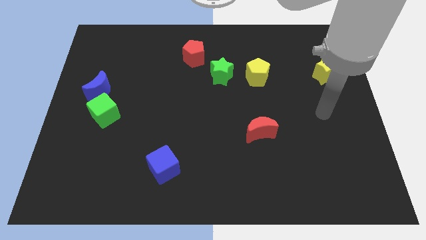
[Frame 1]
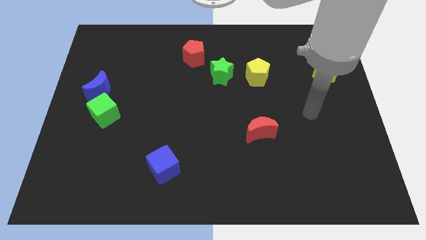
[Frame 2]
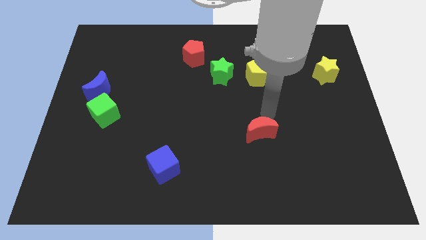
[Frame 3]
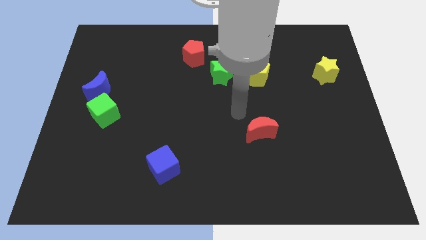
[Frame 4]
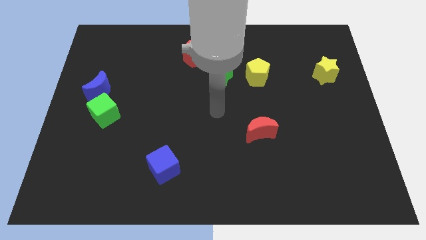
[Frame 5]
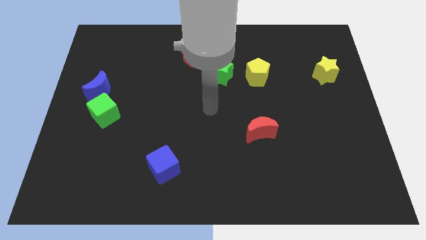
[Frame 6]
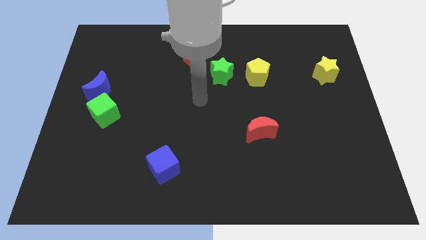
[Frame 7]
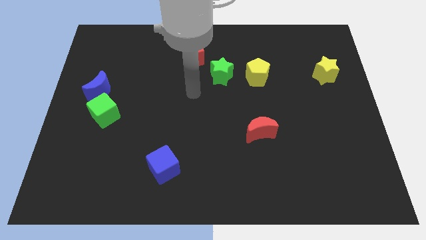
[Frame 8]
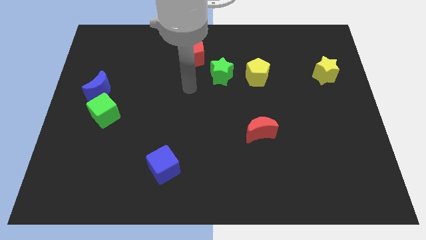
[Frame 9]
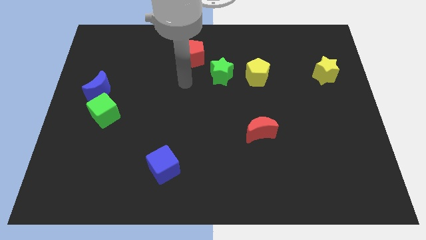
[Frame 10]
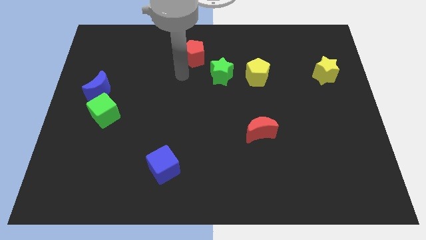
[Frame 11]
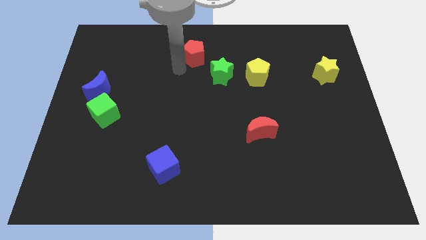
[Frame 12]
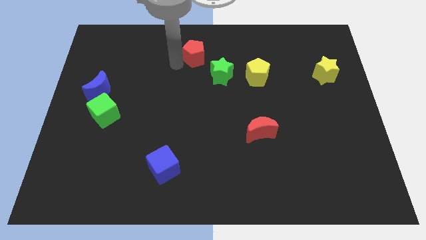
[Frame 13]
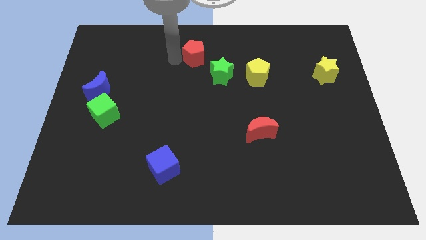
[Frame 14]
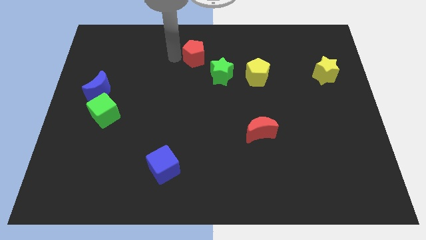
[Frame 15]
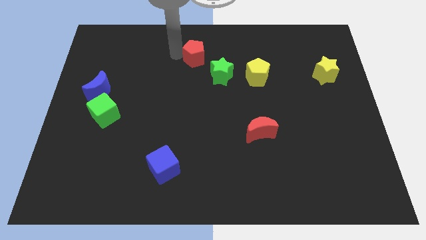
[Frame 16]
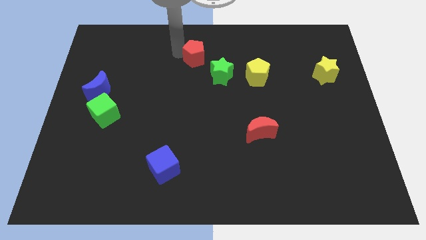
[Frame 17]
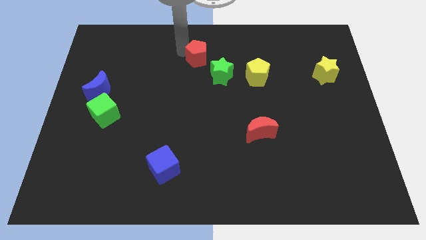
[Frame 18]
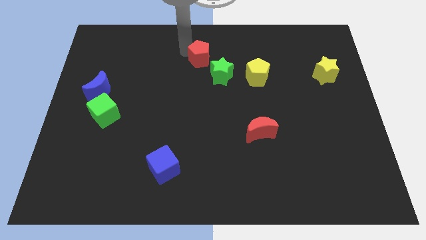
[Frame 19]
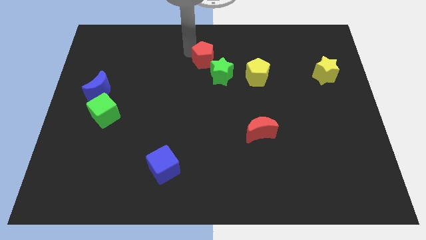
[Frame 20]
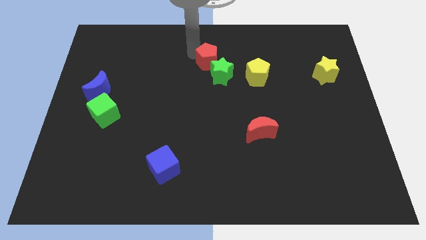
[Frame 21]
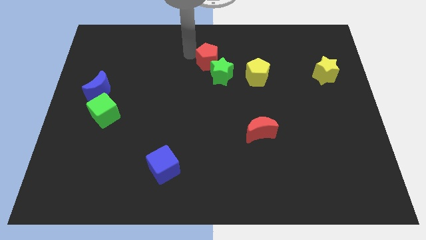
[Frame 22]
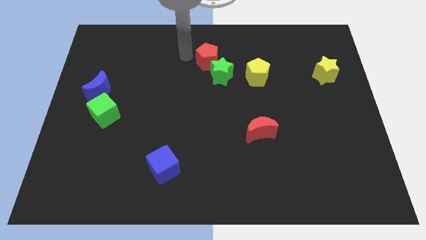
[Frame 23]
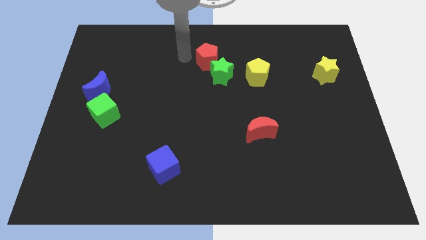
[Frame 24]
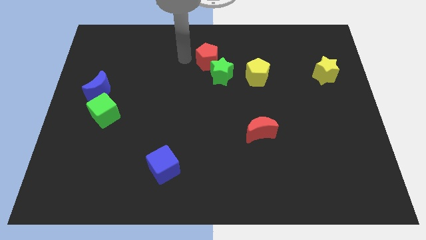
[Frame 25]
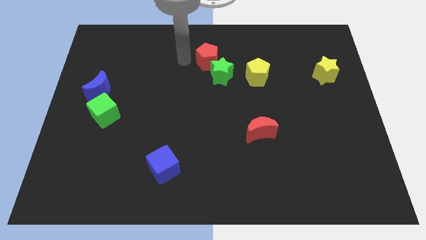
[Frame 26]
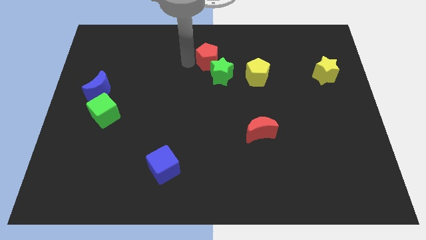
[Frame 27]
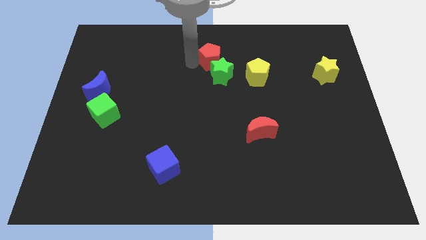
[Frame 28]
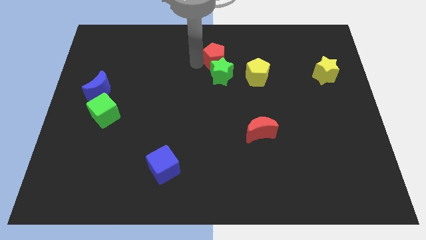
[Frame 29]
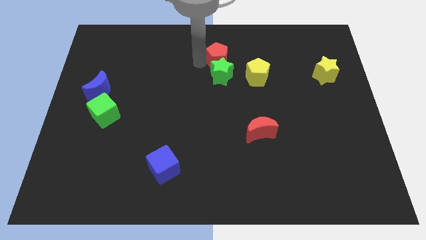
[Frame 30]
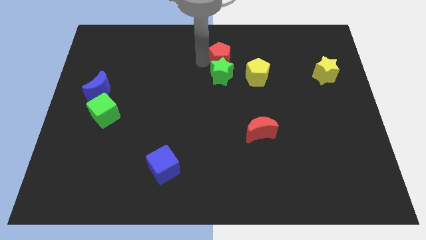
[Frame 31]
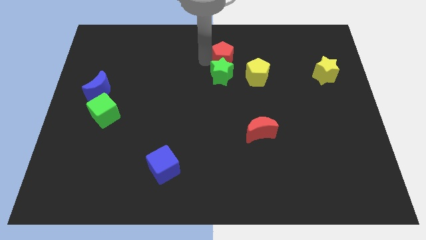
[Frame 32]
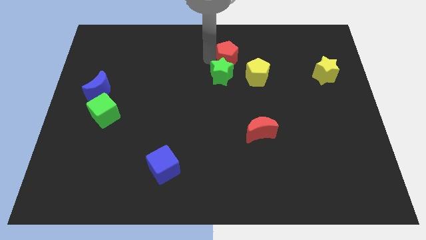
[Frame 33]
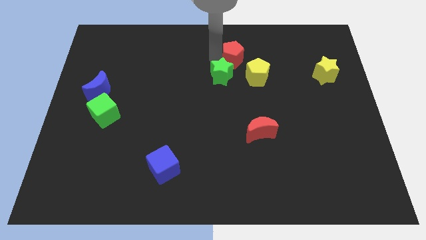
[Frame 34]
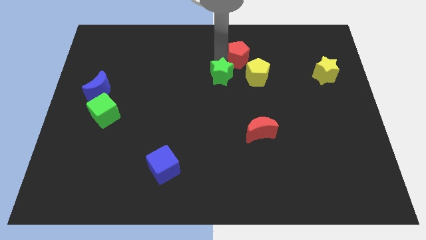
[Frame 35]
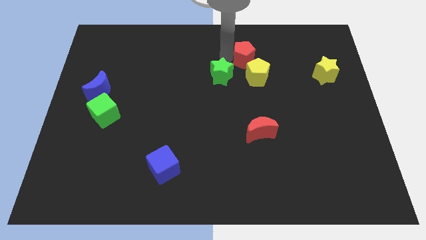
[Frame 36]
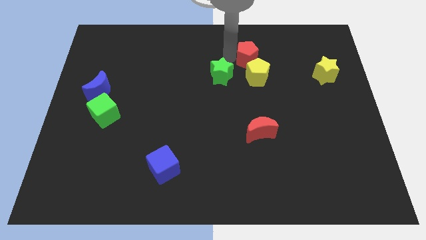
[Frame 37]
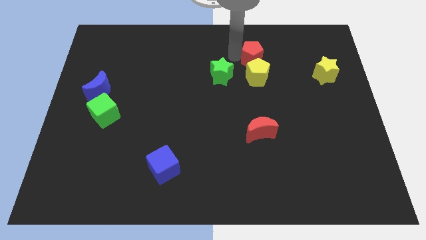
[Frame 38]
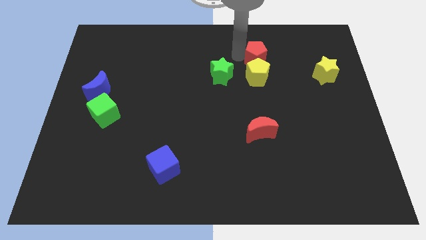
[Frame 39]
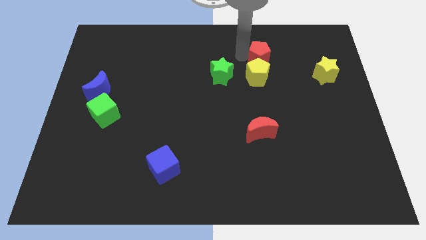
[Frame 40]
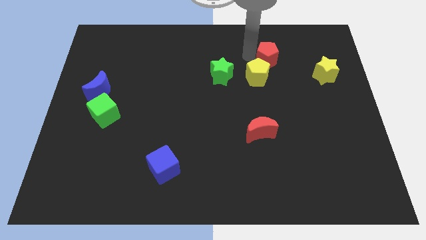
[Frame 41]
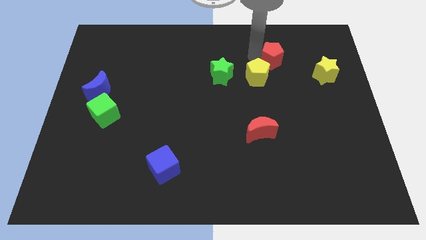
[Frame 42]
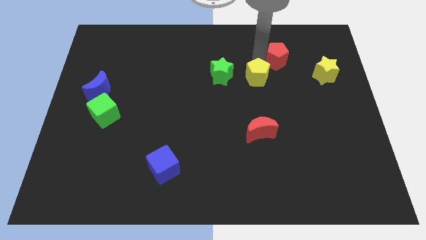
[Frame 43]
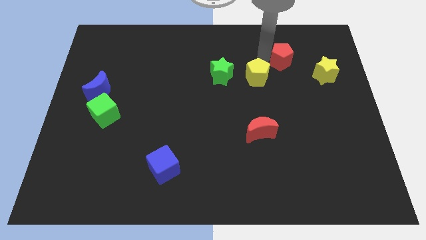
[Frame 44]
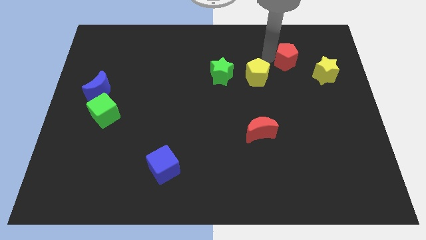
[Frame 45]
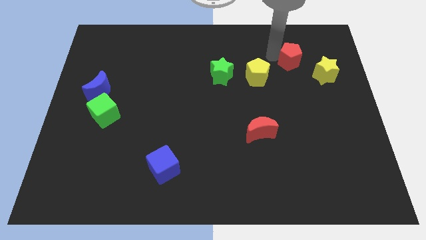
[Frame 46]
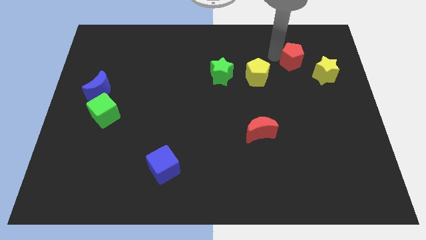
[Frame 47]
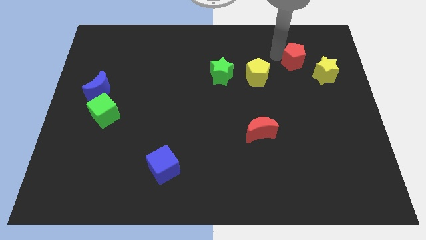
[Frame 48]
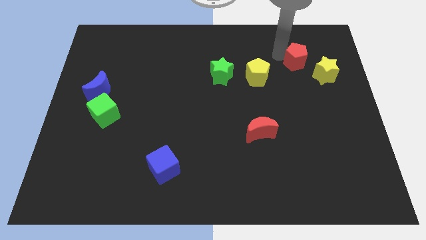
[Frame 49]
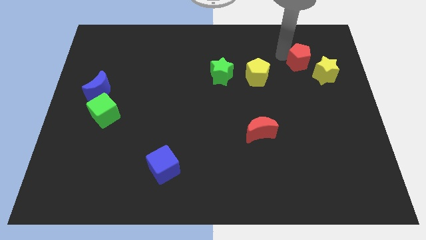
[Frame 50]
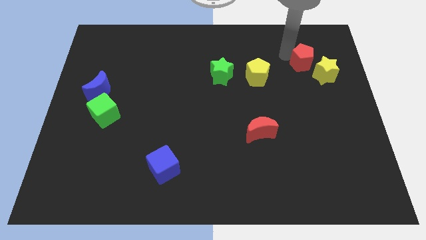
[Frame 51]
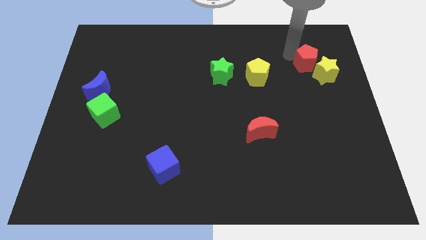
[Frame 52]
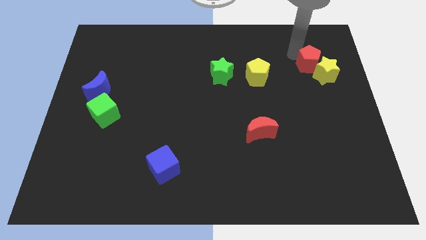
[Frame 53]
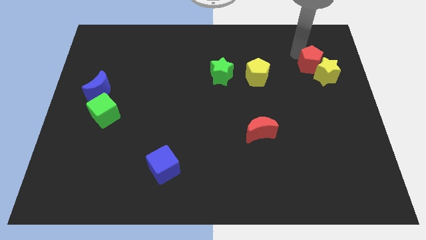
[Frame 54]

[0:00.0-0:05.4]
put the red pentagon towards the yellow star

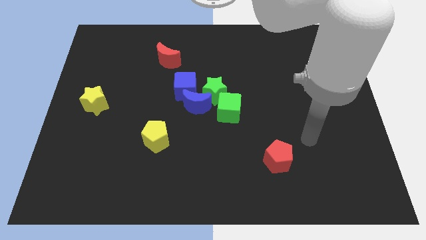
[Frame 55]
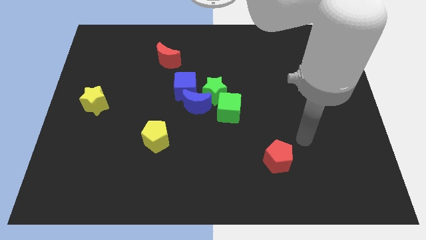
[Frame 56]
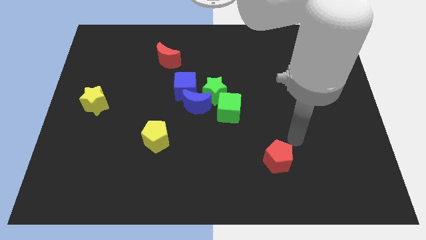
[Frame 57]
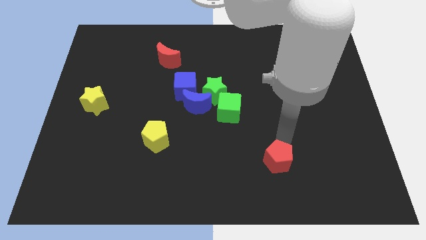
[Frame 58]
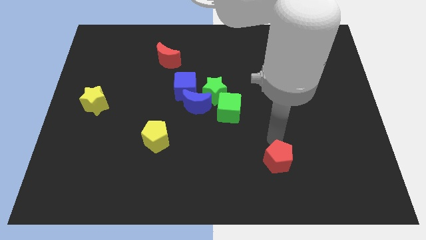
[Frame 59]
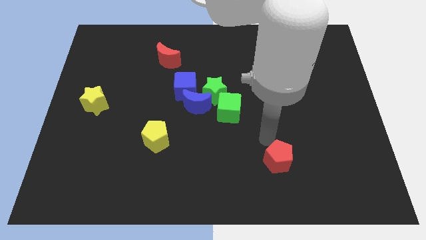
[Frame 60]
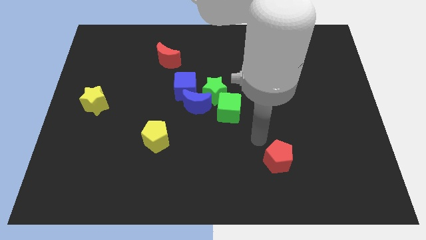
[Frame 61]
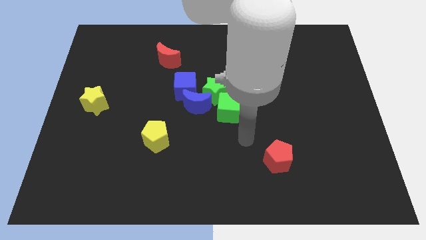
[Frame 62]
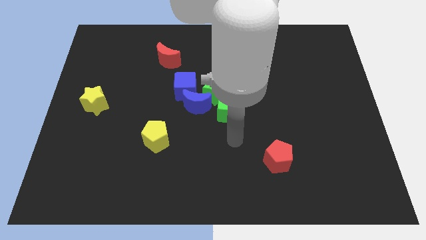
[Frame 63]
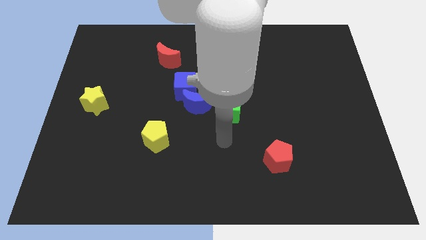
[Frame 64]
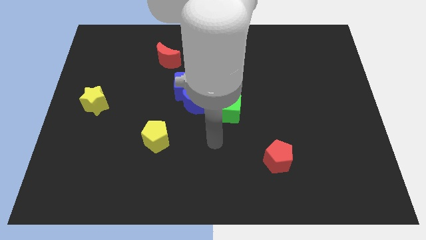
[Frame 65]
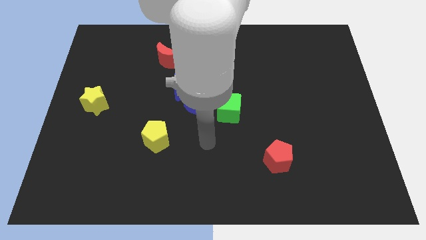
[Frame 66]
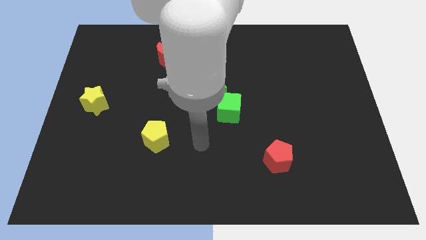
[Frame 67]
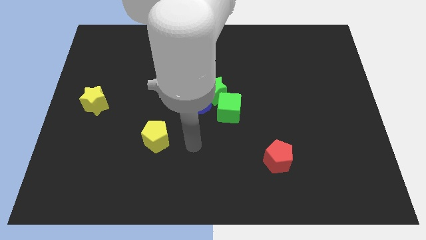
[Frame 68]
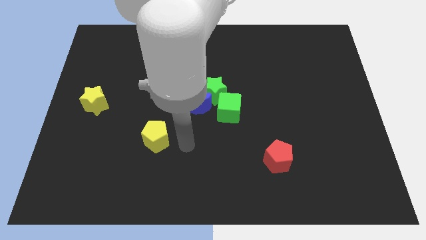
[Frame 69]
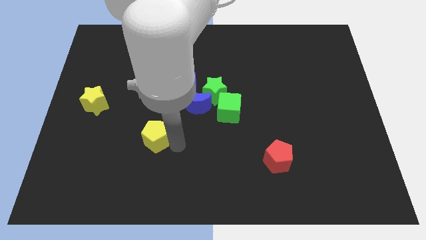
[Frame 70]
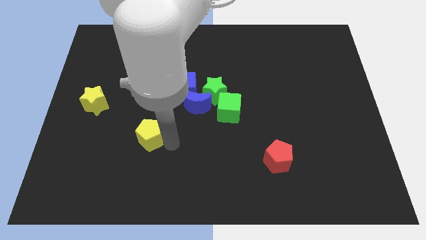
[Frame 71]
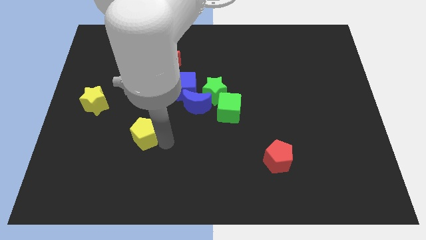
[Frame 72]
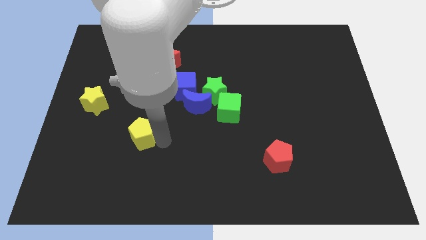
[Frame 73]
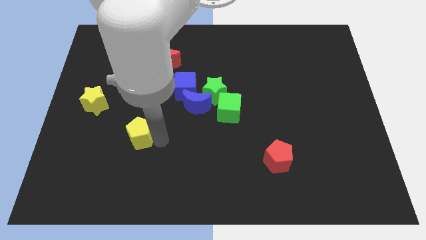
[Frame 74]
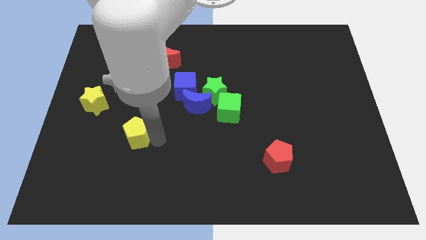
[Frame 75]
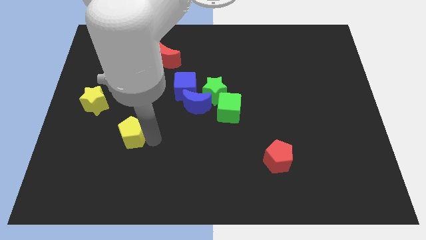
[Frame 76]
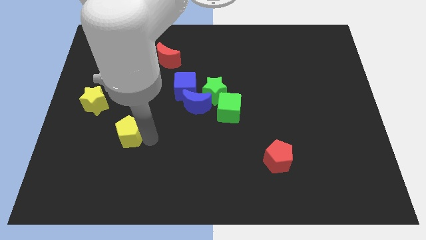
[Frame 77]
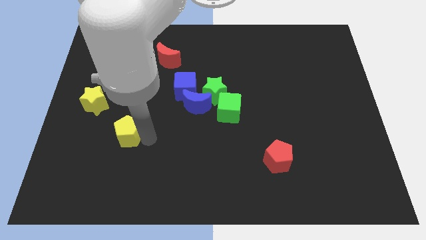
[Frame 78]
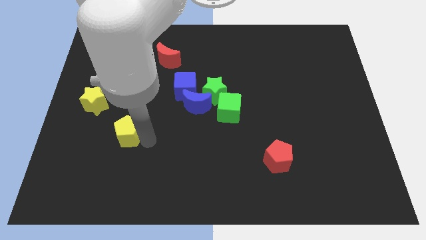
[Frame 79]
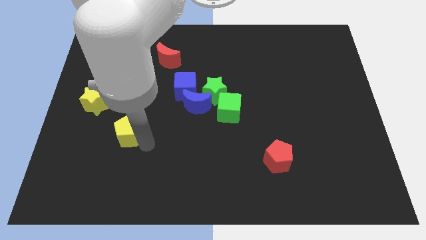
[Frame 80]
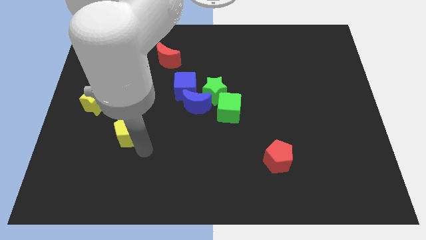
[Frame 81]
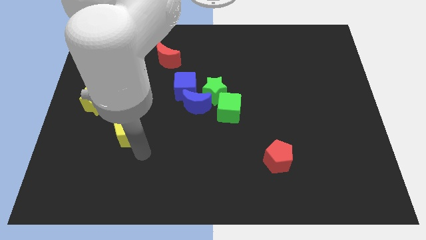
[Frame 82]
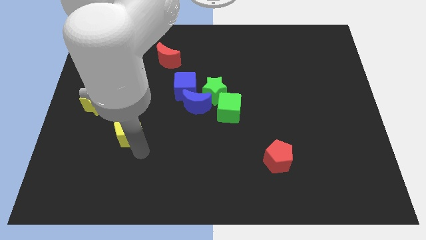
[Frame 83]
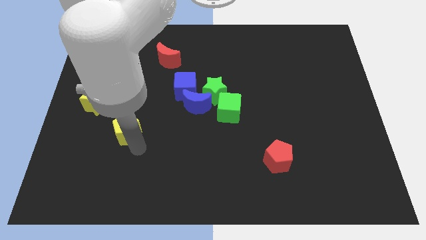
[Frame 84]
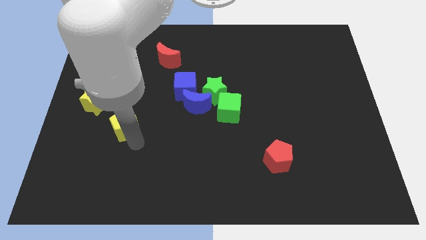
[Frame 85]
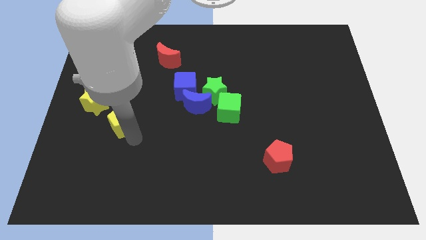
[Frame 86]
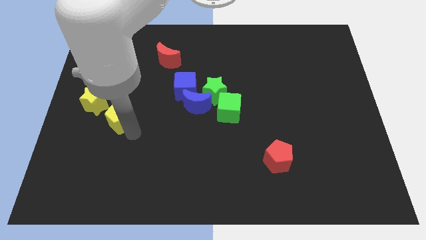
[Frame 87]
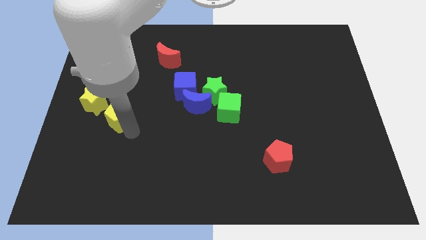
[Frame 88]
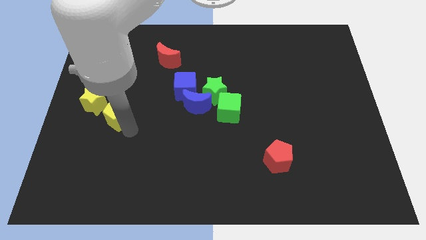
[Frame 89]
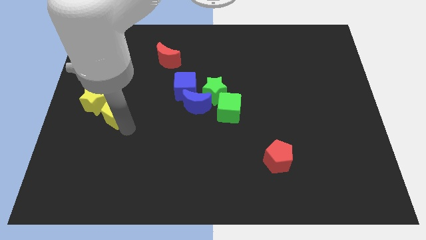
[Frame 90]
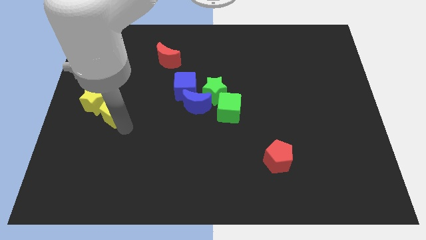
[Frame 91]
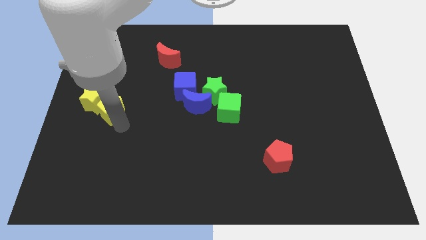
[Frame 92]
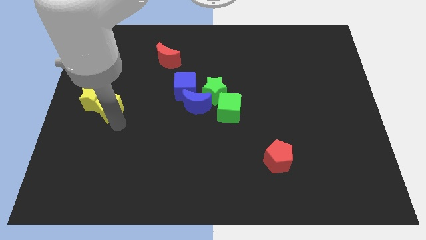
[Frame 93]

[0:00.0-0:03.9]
push the yellow pentagon close to the yellow star
